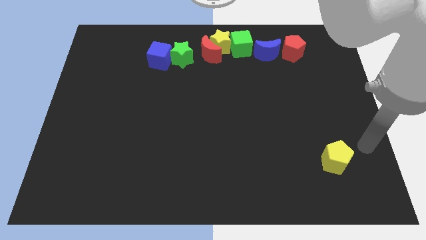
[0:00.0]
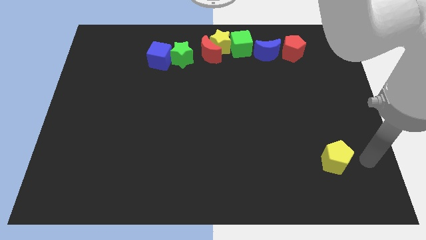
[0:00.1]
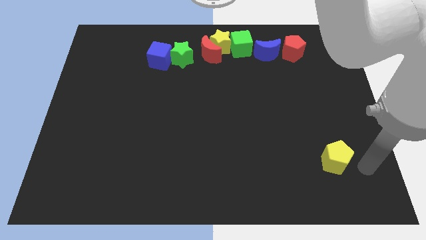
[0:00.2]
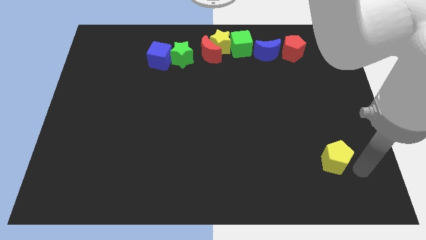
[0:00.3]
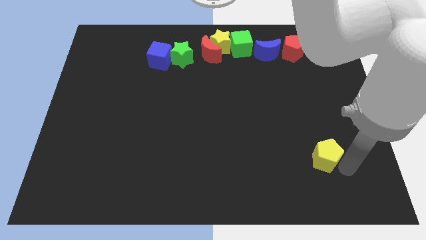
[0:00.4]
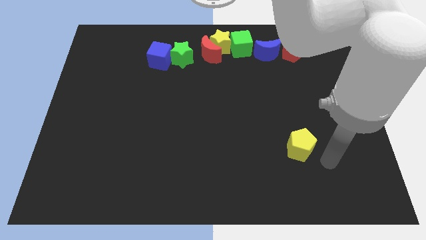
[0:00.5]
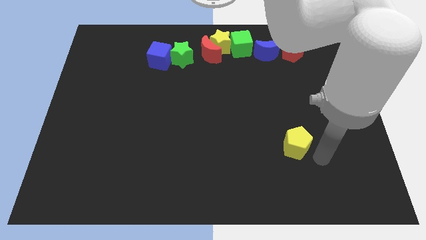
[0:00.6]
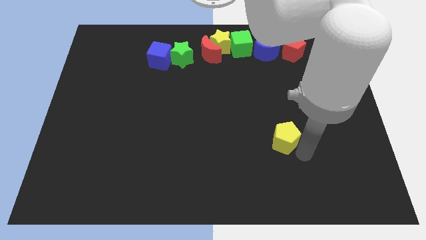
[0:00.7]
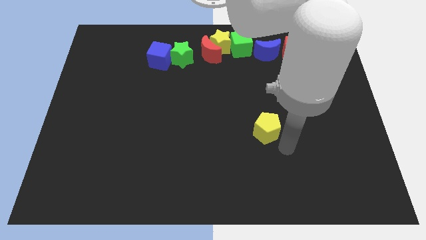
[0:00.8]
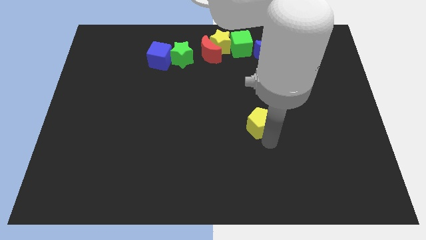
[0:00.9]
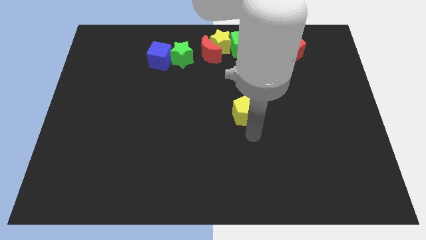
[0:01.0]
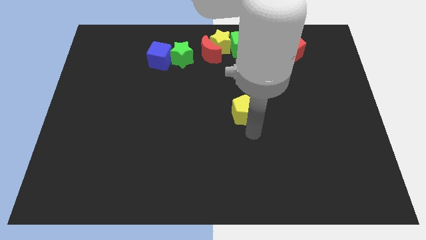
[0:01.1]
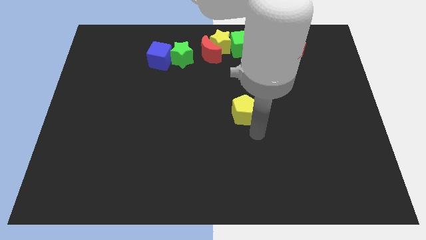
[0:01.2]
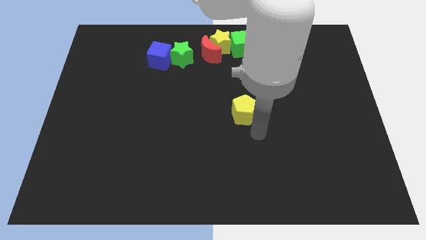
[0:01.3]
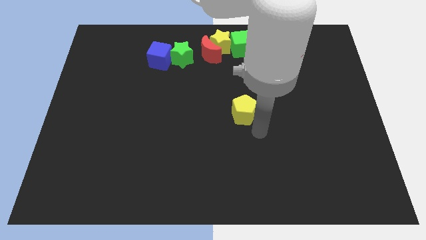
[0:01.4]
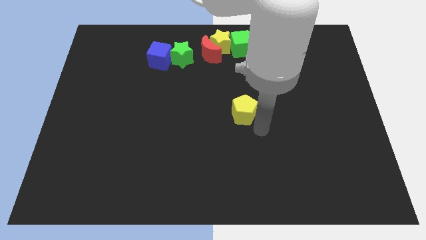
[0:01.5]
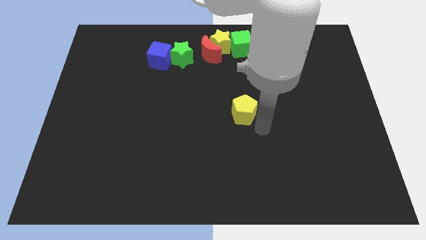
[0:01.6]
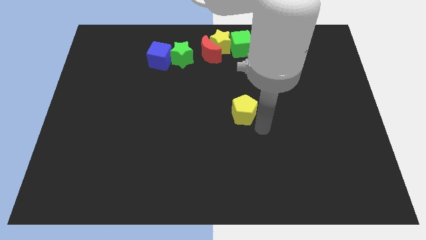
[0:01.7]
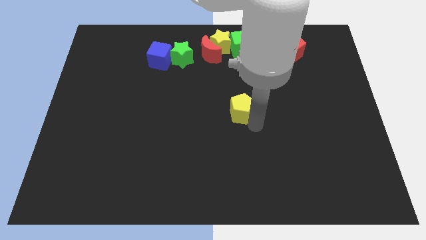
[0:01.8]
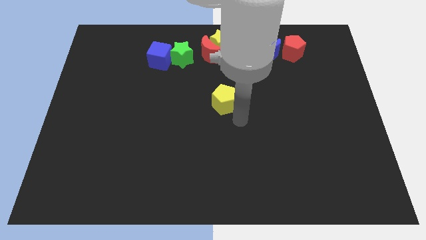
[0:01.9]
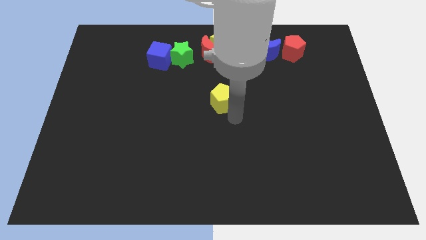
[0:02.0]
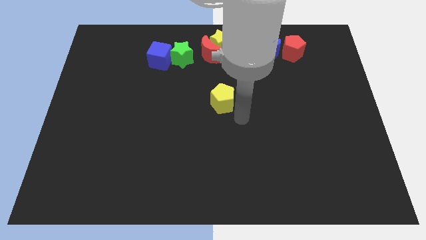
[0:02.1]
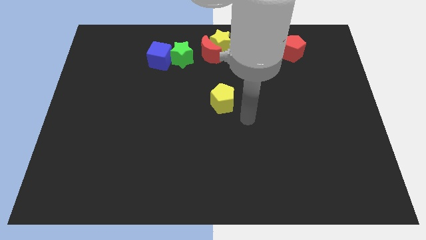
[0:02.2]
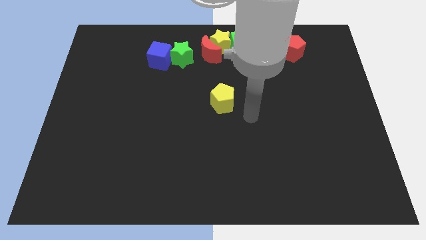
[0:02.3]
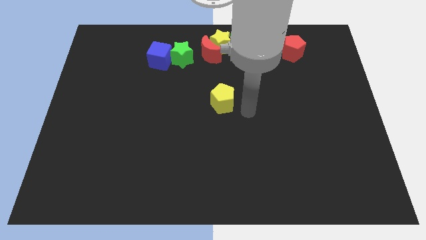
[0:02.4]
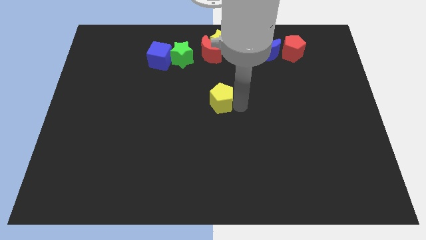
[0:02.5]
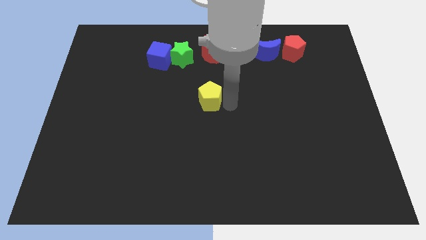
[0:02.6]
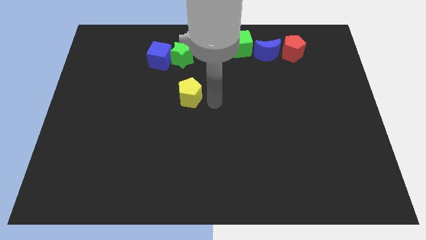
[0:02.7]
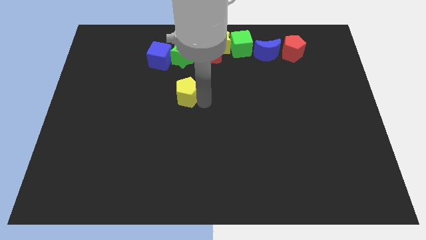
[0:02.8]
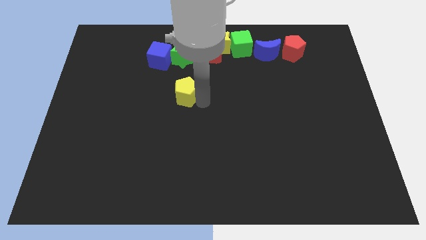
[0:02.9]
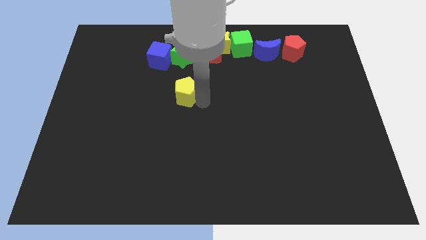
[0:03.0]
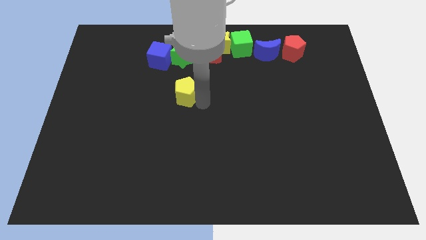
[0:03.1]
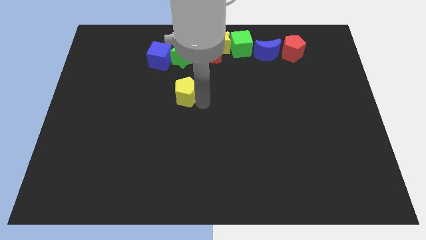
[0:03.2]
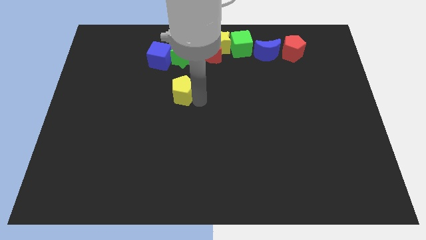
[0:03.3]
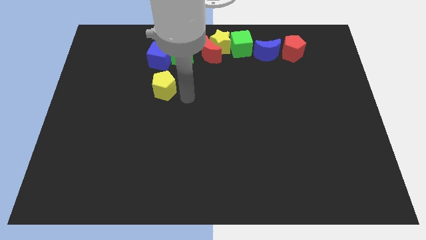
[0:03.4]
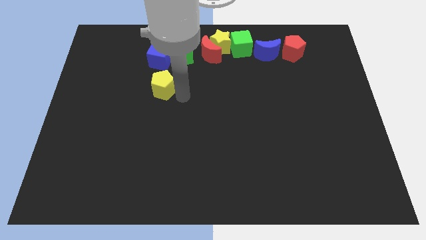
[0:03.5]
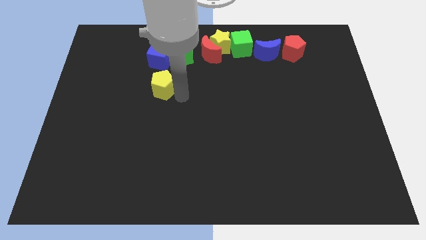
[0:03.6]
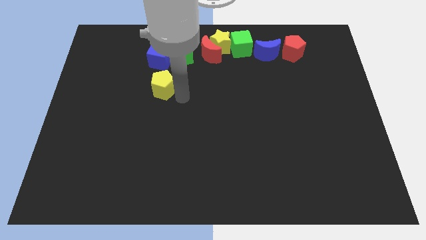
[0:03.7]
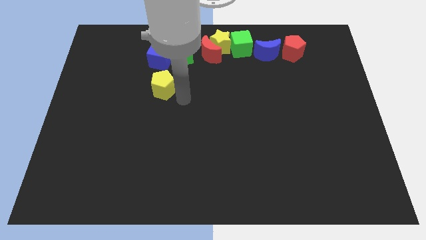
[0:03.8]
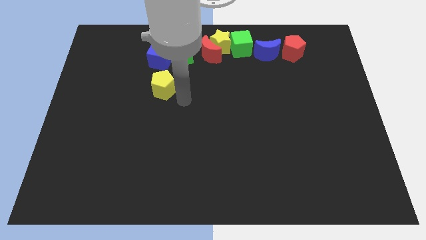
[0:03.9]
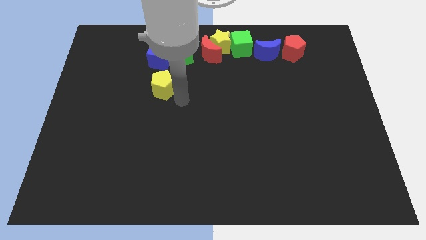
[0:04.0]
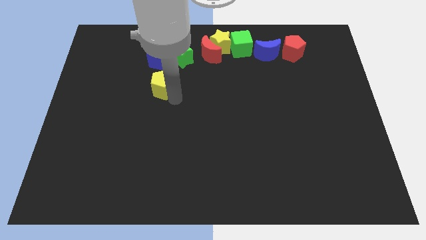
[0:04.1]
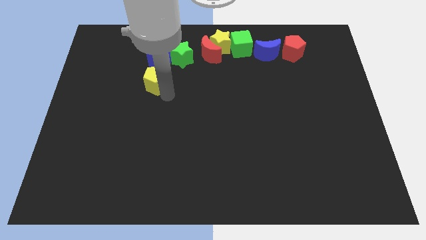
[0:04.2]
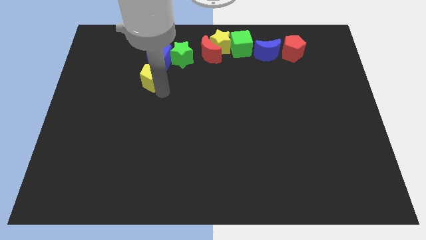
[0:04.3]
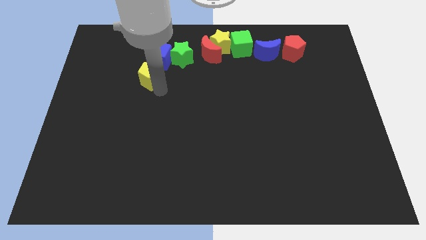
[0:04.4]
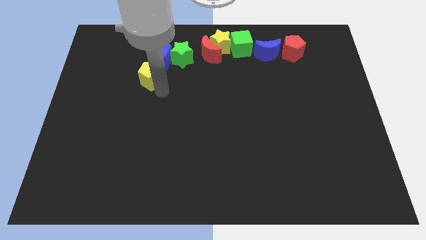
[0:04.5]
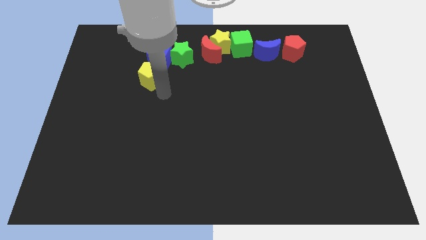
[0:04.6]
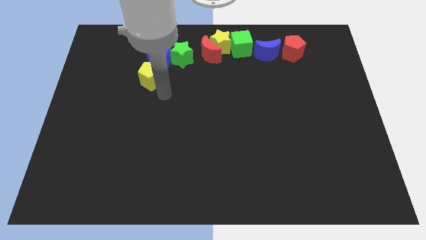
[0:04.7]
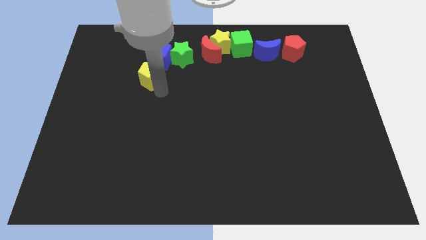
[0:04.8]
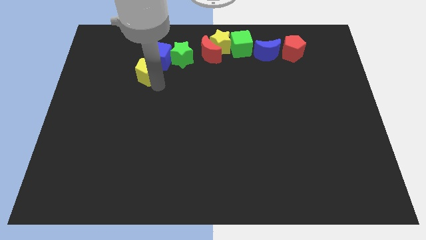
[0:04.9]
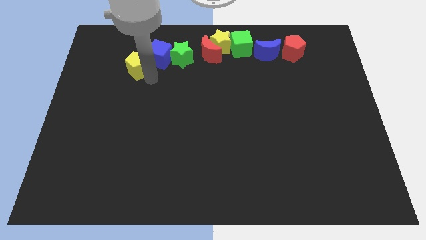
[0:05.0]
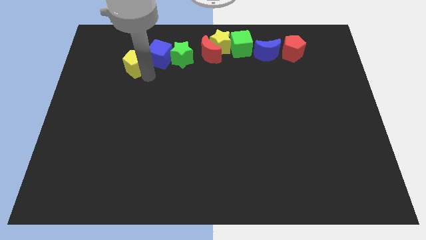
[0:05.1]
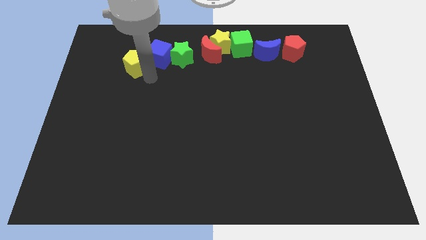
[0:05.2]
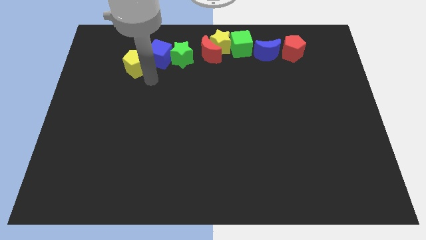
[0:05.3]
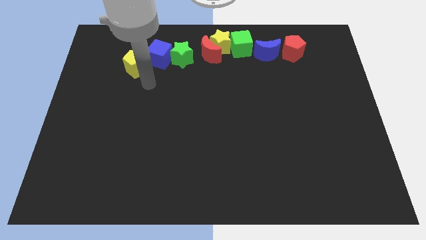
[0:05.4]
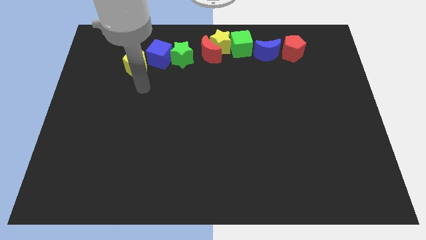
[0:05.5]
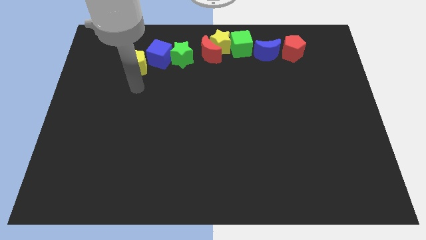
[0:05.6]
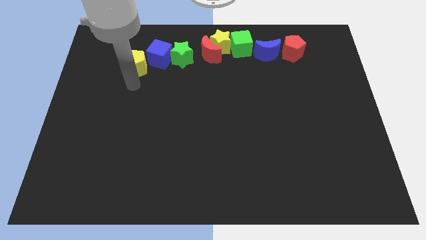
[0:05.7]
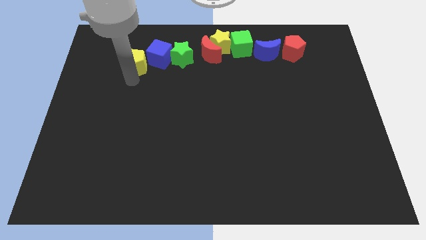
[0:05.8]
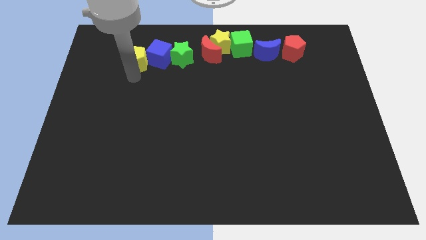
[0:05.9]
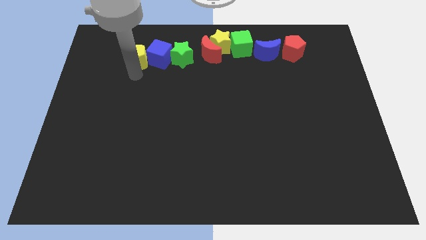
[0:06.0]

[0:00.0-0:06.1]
move the yellow pentagon to the left of the blue cube

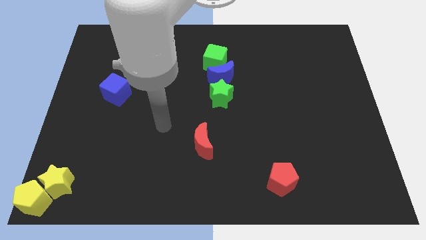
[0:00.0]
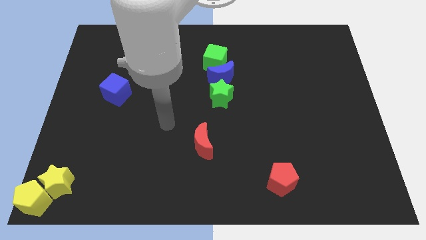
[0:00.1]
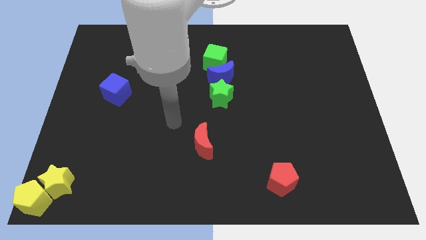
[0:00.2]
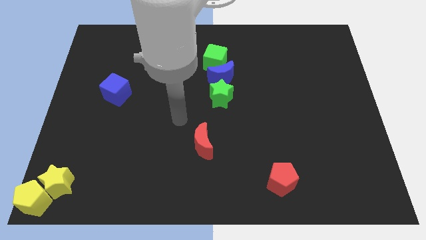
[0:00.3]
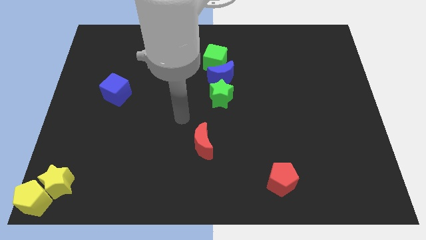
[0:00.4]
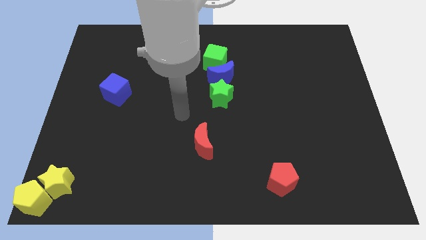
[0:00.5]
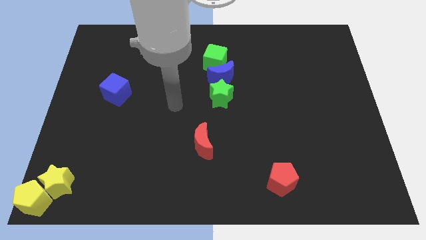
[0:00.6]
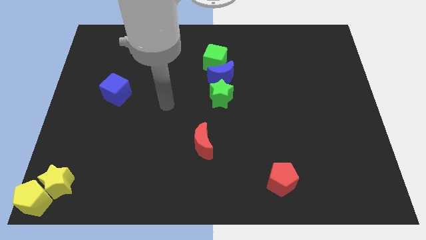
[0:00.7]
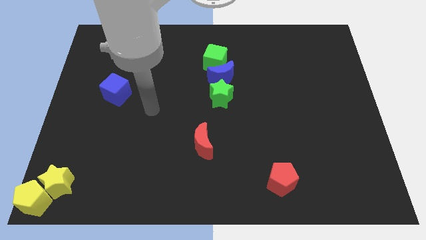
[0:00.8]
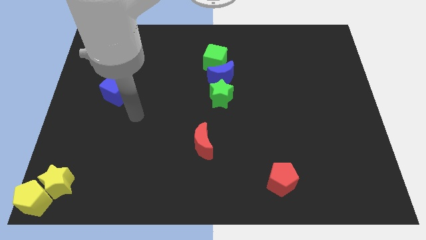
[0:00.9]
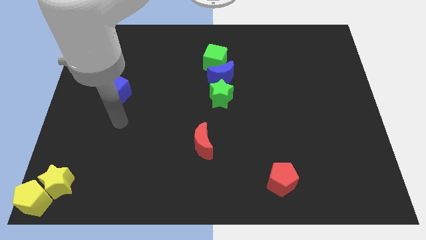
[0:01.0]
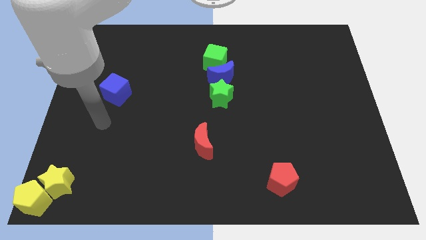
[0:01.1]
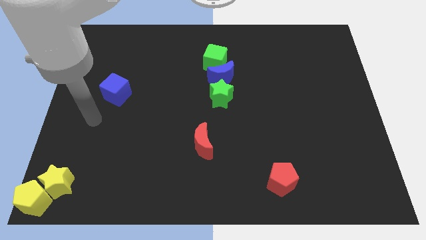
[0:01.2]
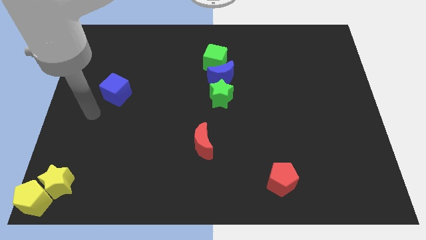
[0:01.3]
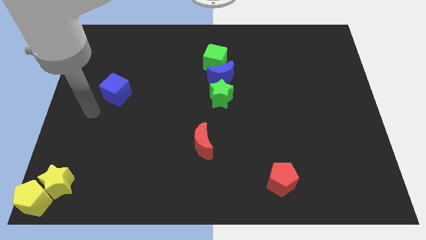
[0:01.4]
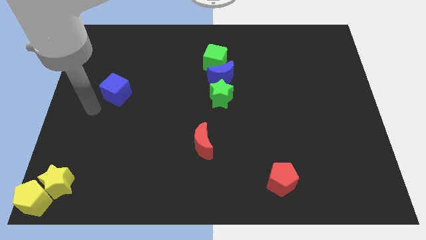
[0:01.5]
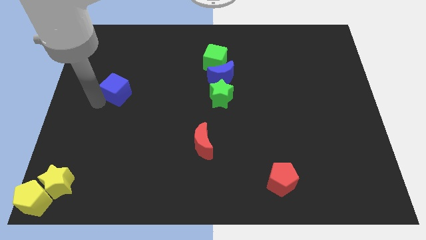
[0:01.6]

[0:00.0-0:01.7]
point the arm at the bottom left side of the blue cube

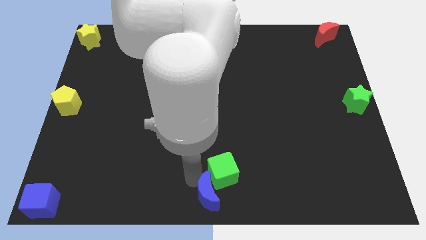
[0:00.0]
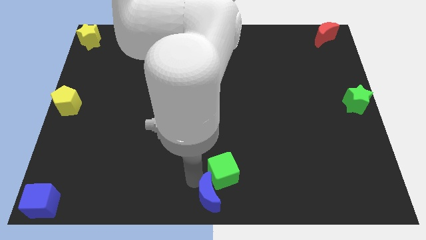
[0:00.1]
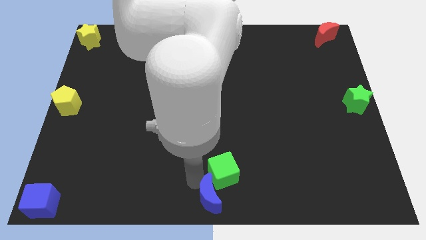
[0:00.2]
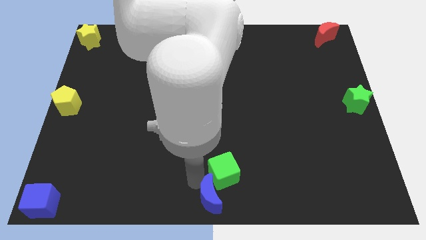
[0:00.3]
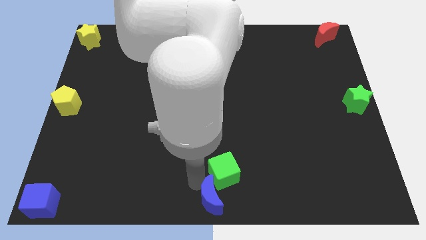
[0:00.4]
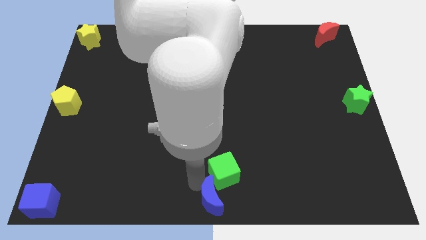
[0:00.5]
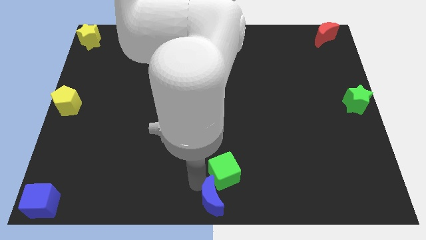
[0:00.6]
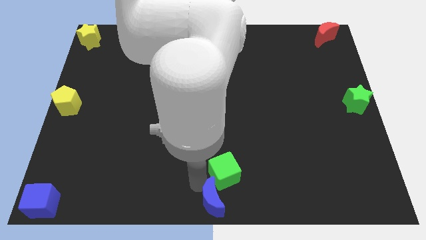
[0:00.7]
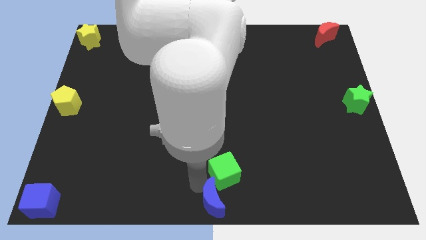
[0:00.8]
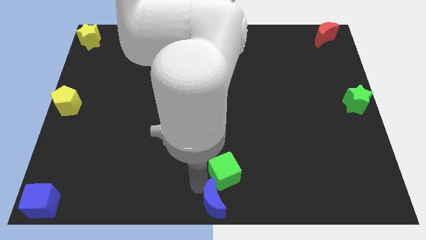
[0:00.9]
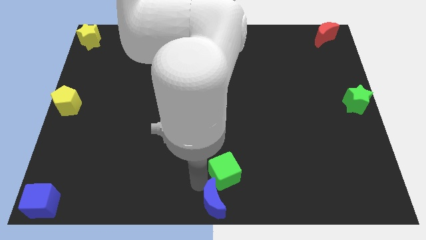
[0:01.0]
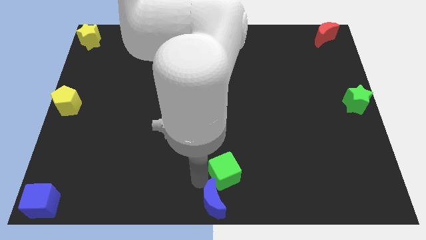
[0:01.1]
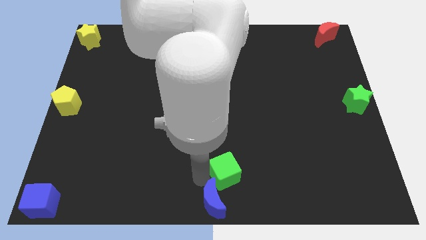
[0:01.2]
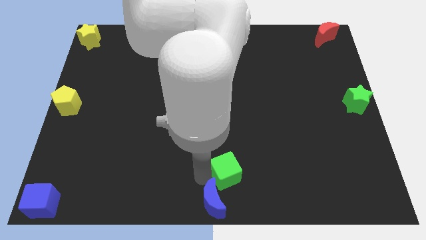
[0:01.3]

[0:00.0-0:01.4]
move the blue crescent to the bottom middle of the board
